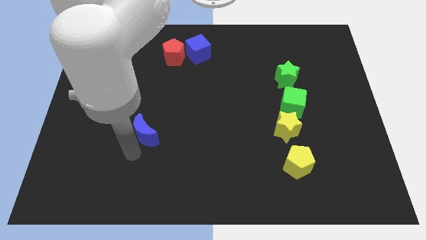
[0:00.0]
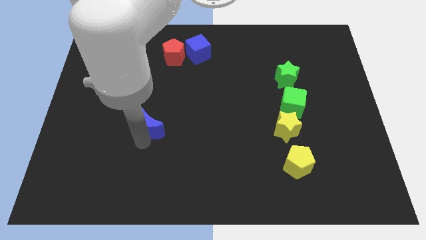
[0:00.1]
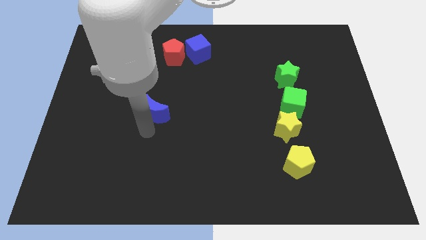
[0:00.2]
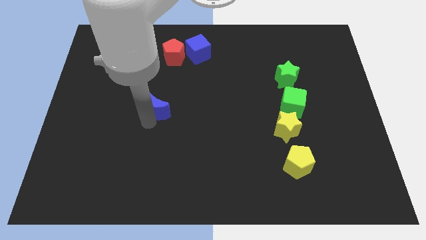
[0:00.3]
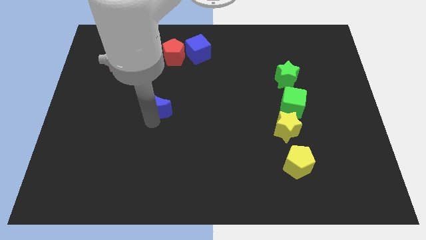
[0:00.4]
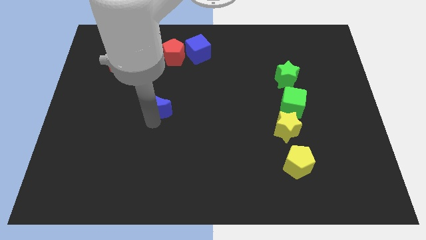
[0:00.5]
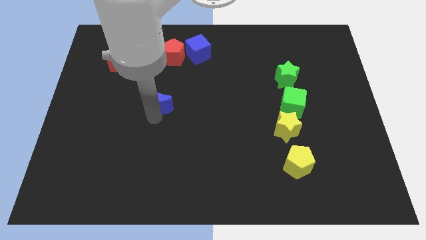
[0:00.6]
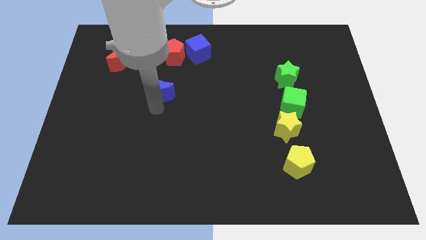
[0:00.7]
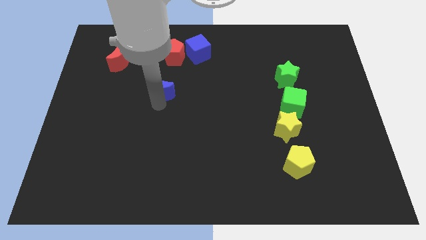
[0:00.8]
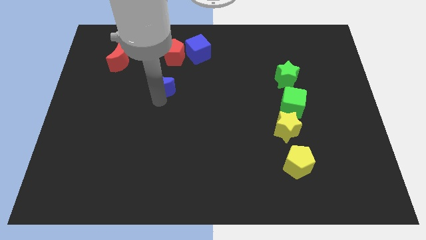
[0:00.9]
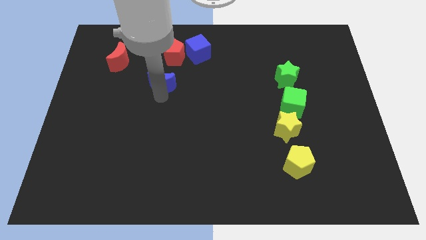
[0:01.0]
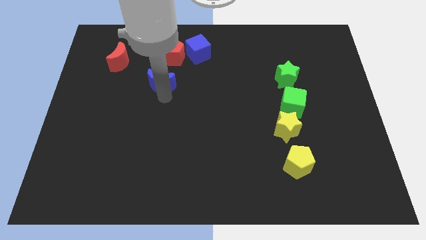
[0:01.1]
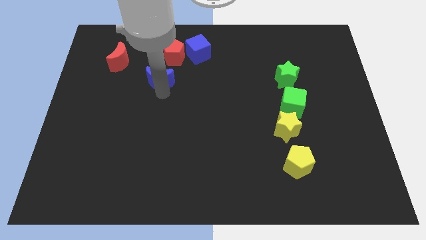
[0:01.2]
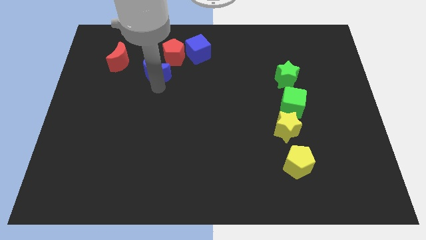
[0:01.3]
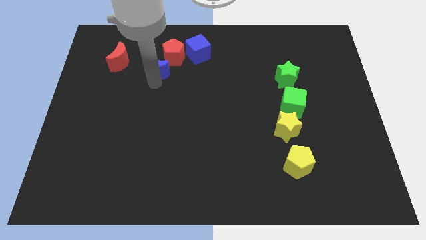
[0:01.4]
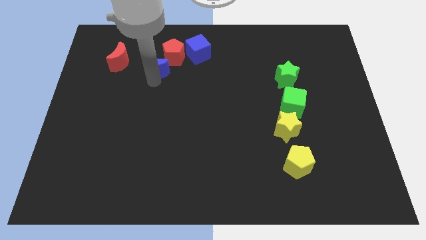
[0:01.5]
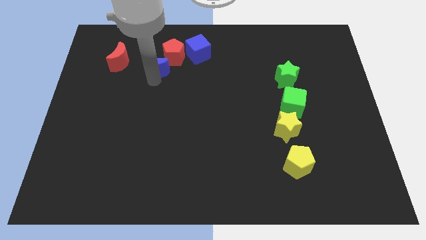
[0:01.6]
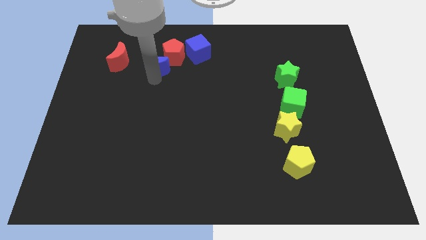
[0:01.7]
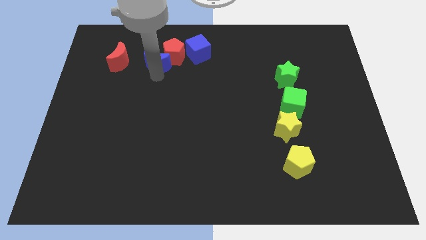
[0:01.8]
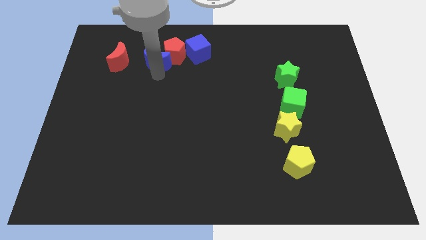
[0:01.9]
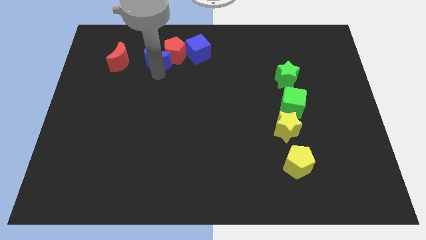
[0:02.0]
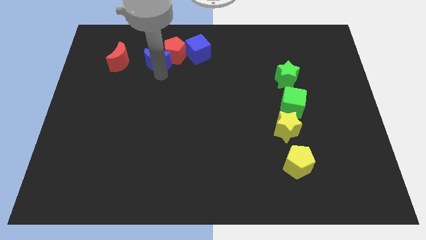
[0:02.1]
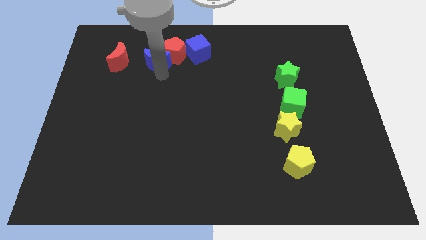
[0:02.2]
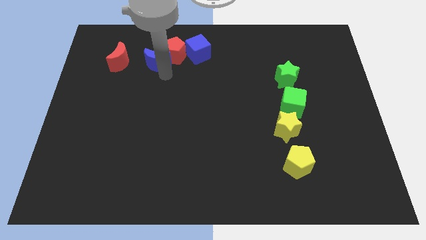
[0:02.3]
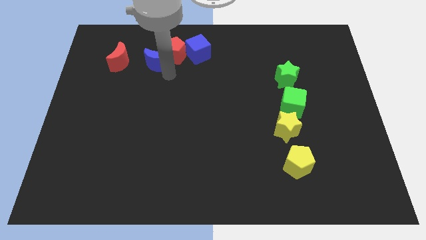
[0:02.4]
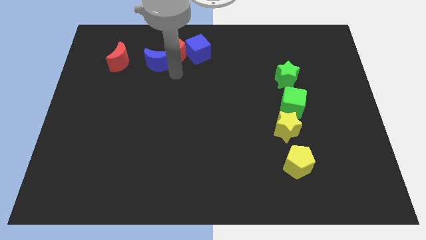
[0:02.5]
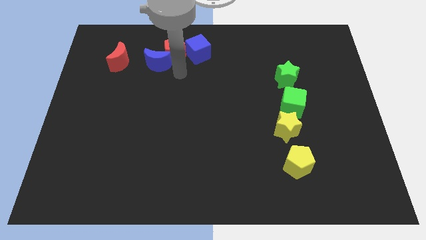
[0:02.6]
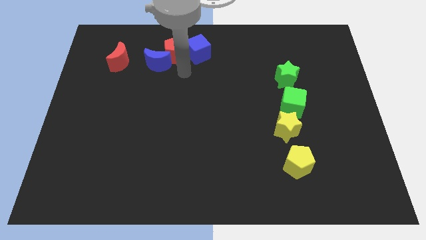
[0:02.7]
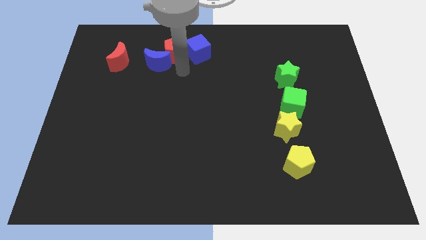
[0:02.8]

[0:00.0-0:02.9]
push the blue moon towards the red pentagon

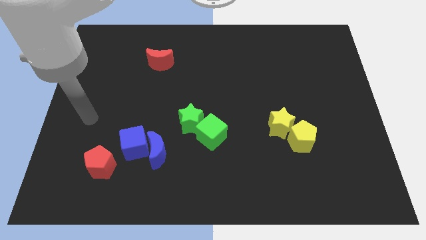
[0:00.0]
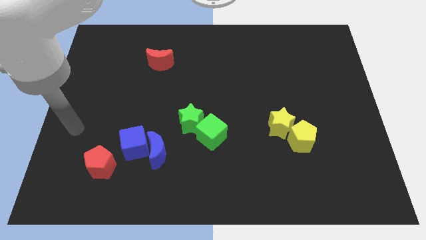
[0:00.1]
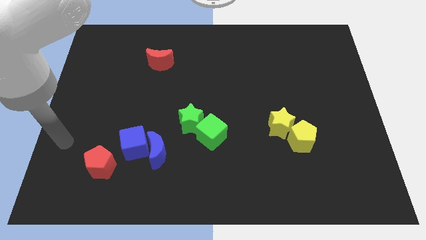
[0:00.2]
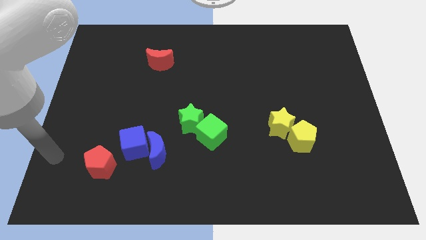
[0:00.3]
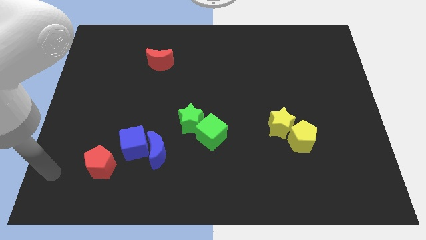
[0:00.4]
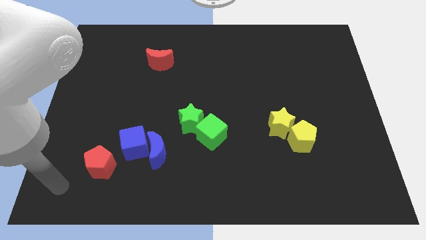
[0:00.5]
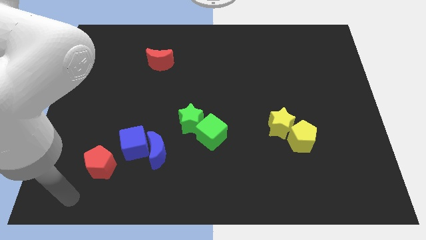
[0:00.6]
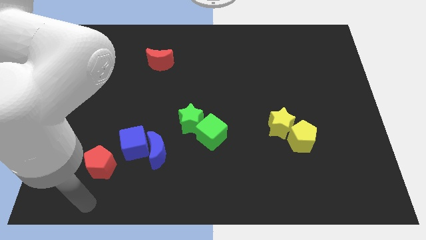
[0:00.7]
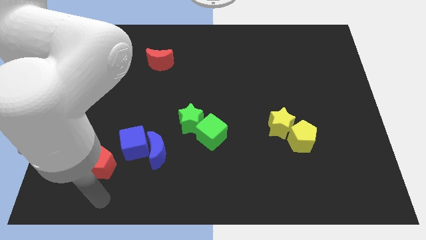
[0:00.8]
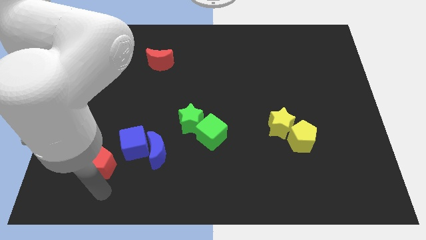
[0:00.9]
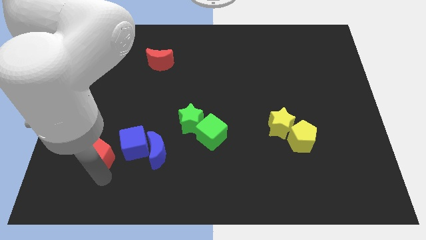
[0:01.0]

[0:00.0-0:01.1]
place the arm below the red pentagon

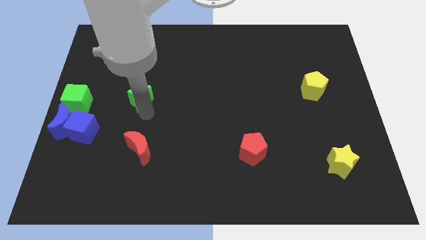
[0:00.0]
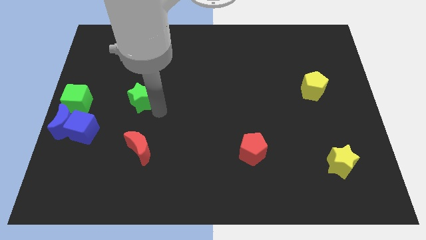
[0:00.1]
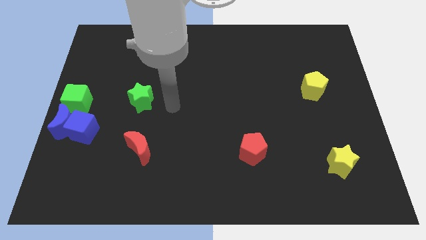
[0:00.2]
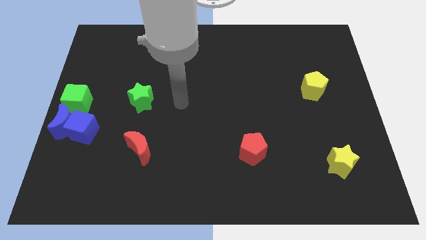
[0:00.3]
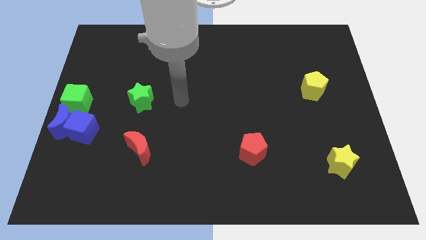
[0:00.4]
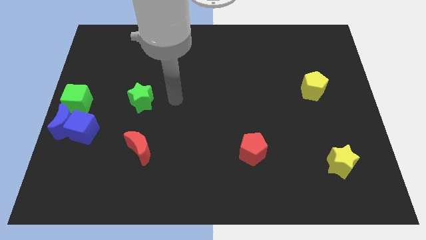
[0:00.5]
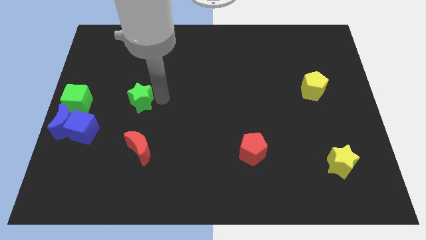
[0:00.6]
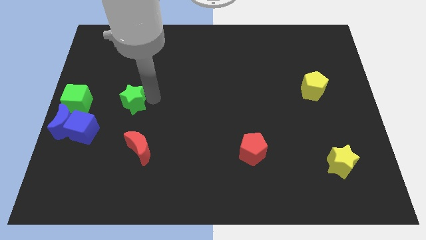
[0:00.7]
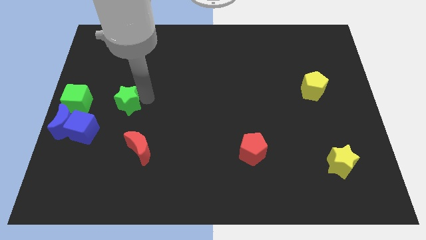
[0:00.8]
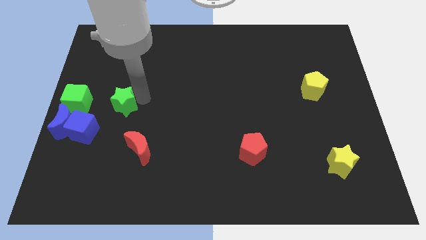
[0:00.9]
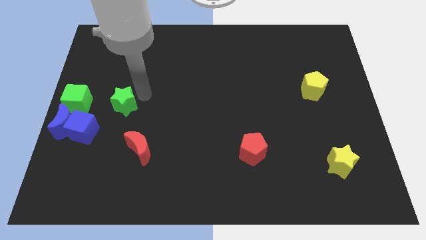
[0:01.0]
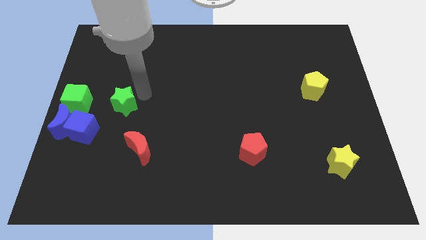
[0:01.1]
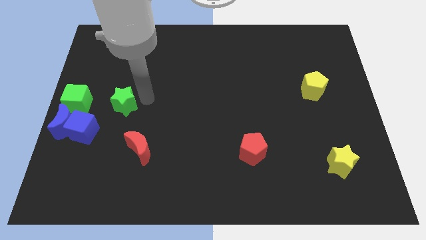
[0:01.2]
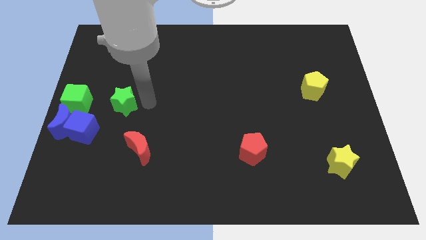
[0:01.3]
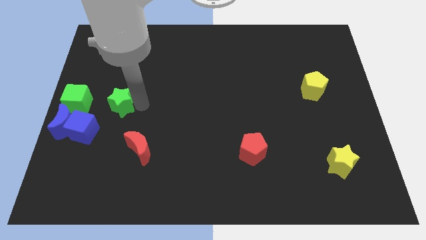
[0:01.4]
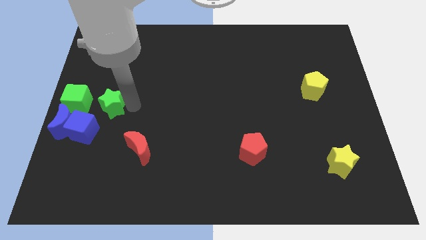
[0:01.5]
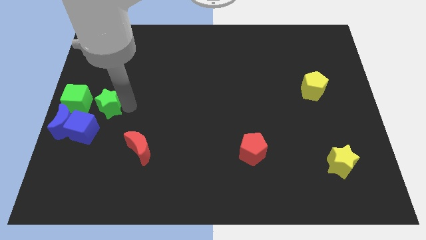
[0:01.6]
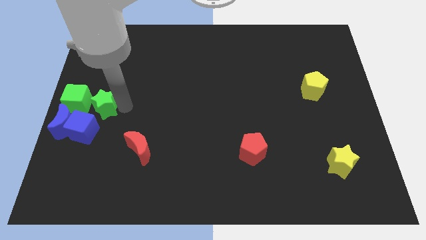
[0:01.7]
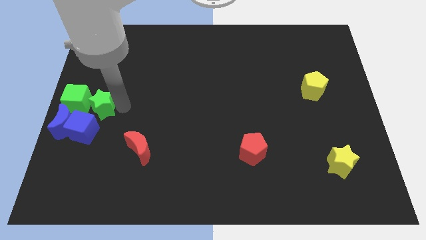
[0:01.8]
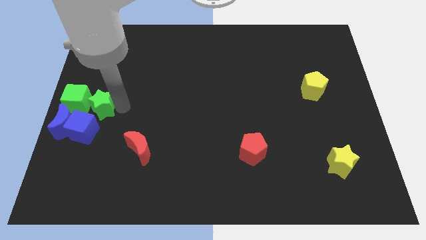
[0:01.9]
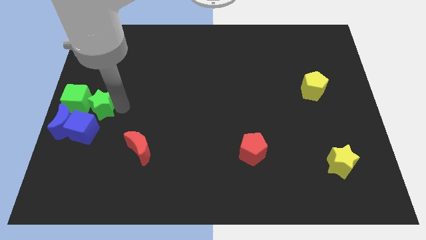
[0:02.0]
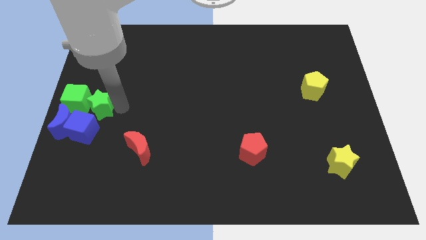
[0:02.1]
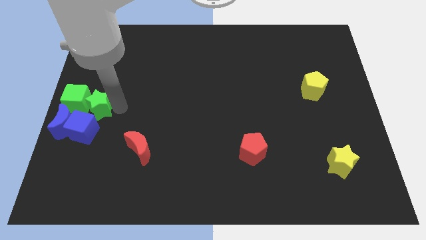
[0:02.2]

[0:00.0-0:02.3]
drag the green star towards the right side of the green cube

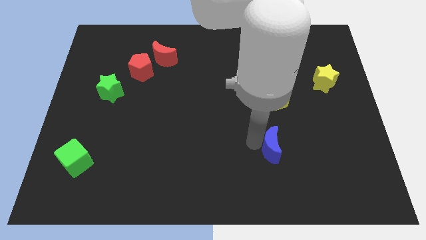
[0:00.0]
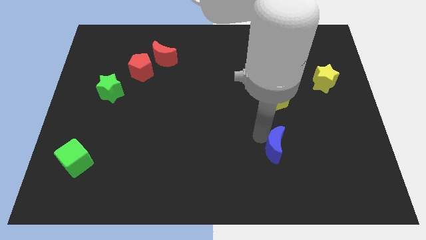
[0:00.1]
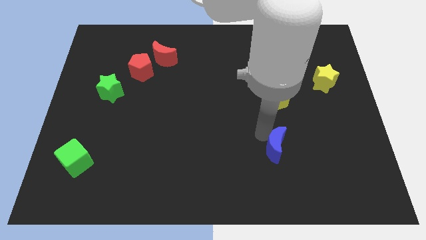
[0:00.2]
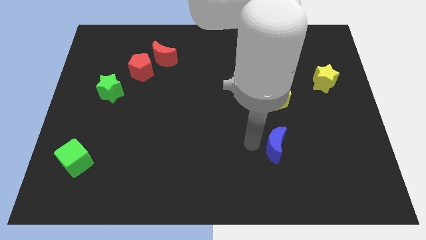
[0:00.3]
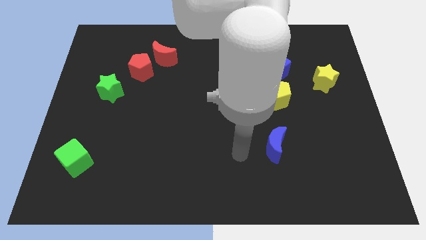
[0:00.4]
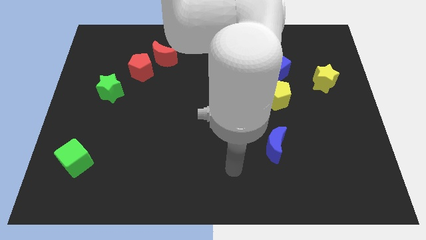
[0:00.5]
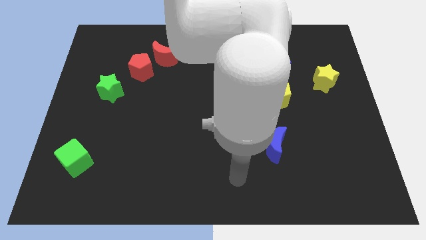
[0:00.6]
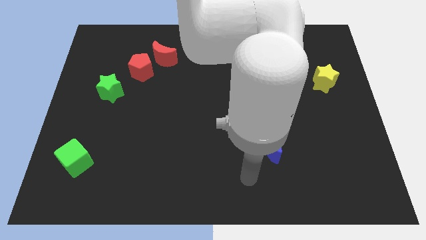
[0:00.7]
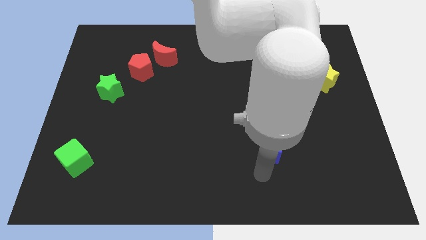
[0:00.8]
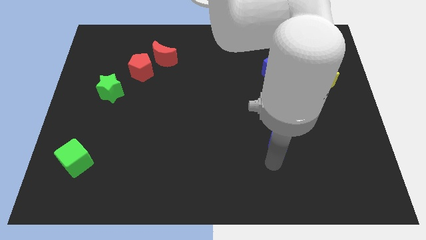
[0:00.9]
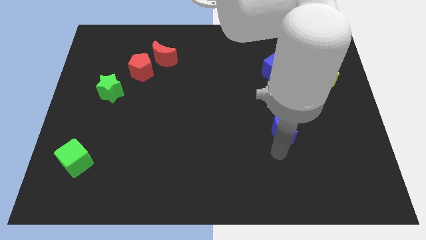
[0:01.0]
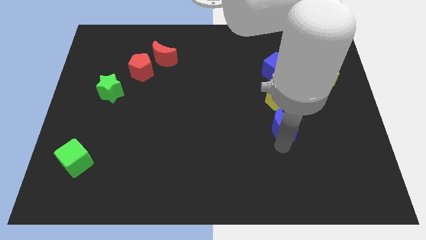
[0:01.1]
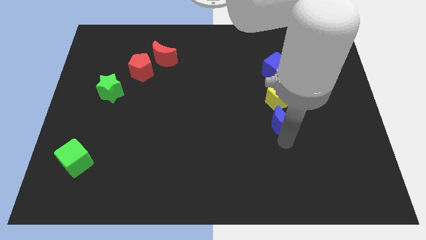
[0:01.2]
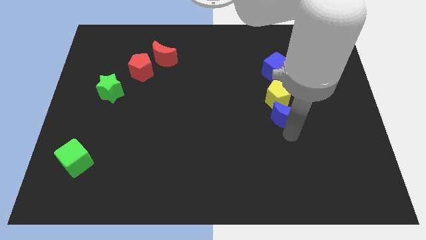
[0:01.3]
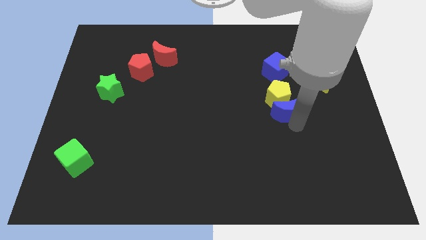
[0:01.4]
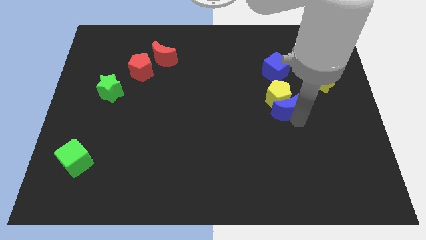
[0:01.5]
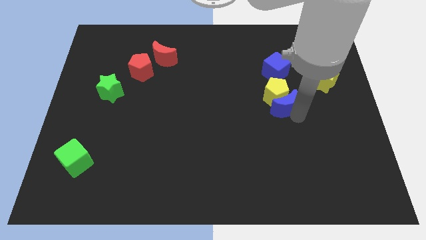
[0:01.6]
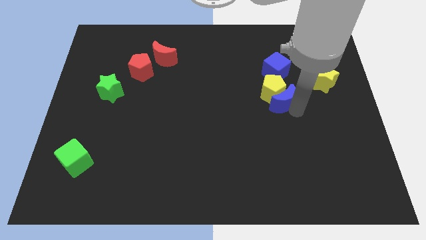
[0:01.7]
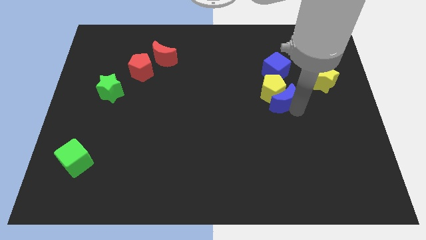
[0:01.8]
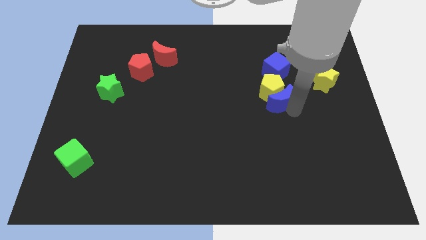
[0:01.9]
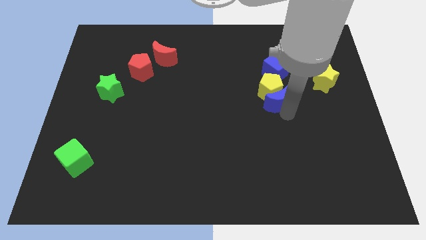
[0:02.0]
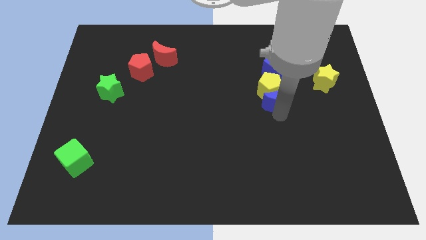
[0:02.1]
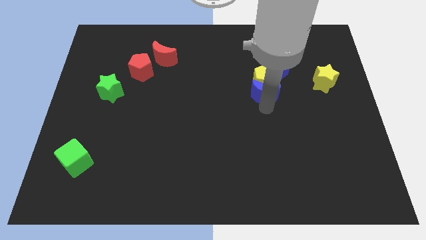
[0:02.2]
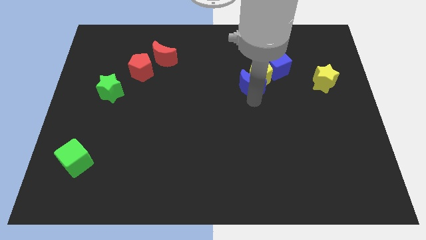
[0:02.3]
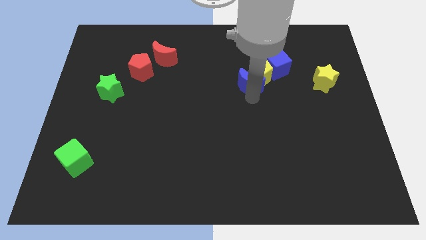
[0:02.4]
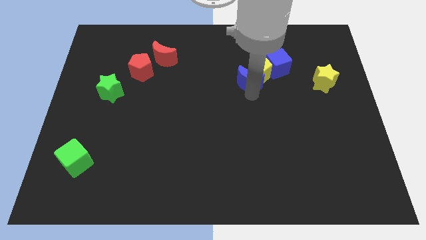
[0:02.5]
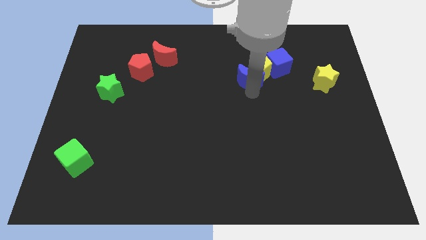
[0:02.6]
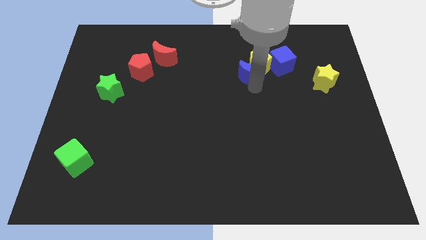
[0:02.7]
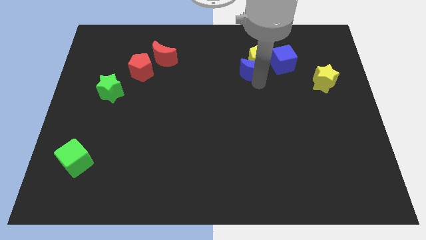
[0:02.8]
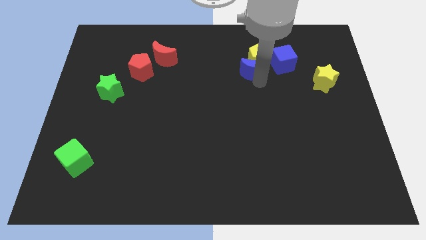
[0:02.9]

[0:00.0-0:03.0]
push blue moon yellow pentagon in to blue cube
